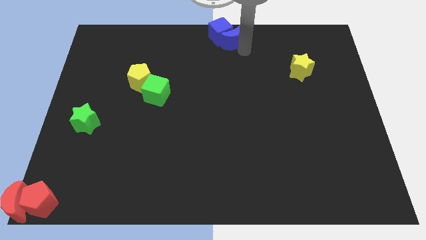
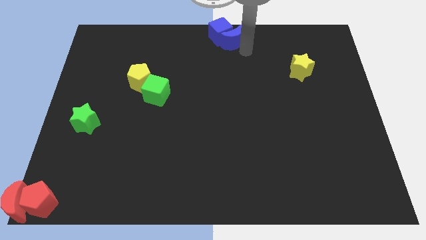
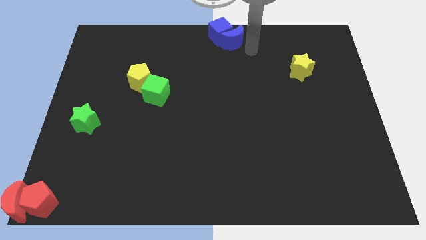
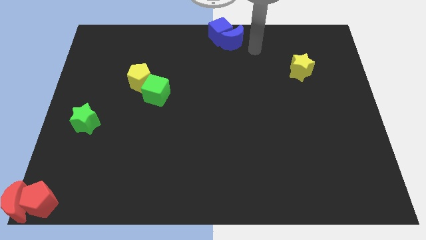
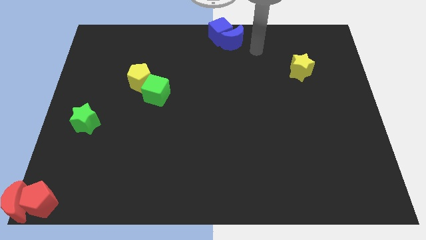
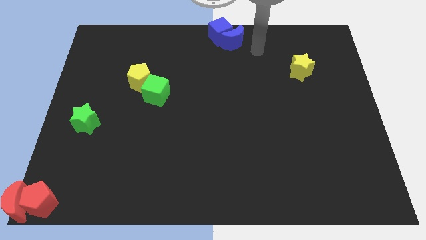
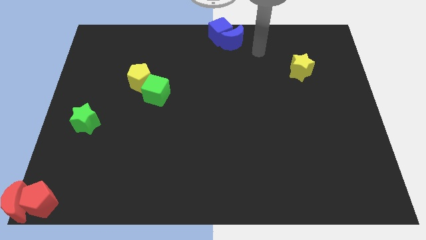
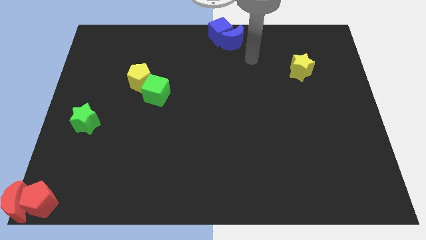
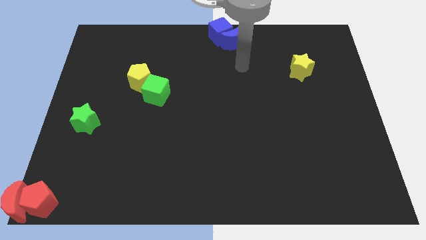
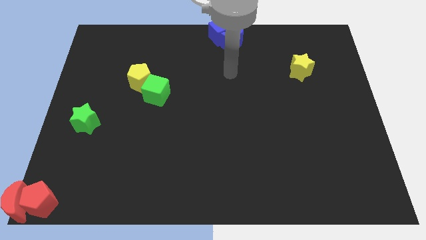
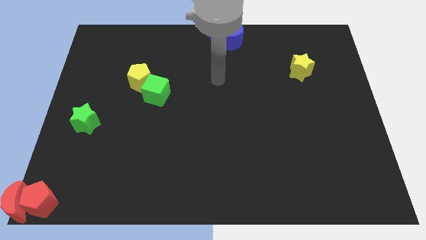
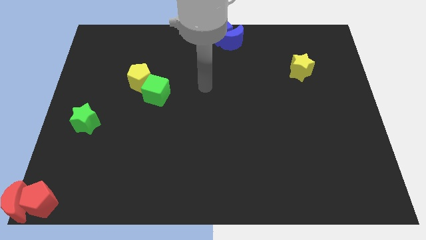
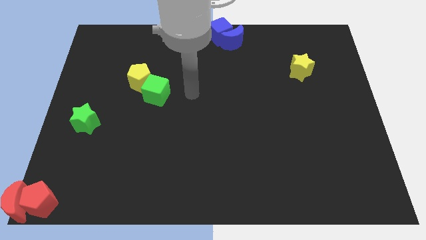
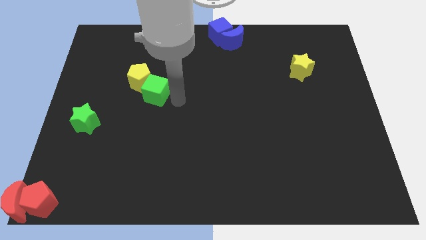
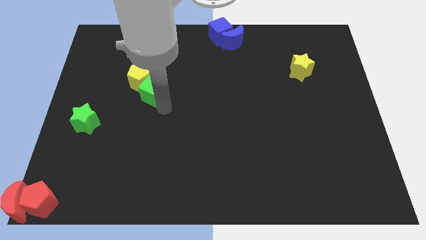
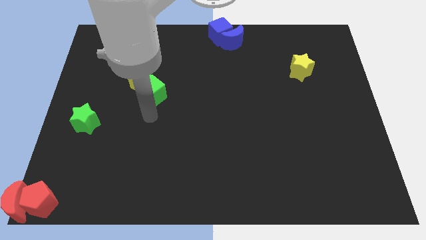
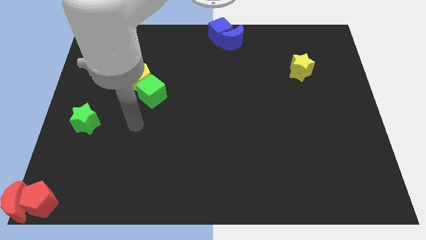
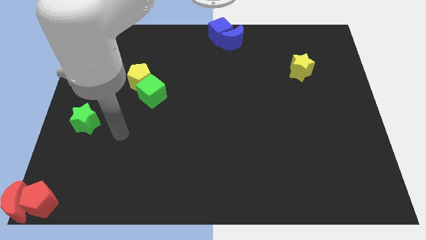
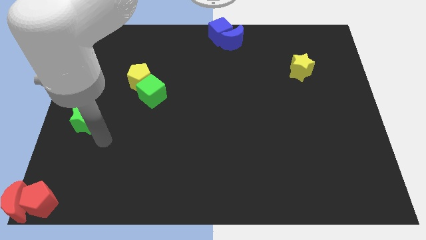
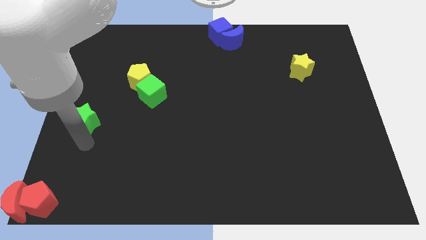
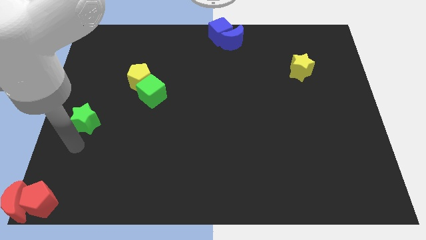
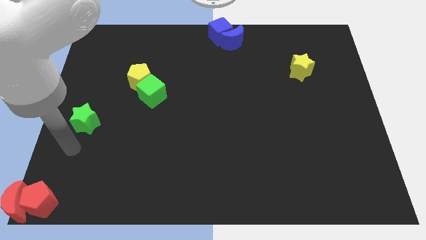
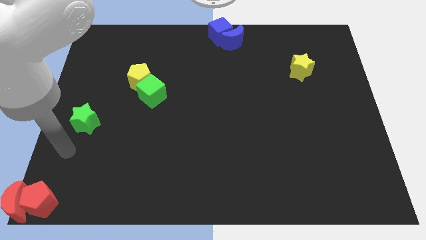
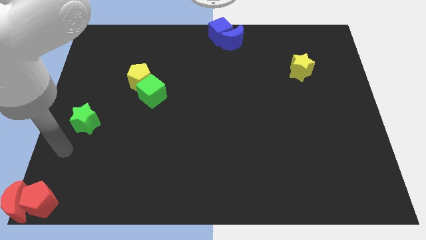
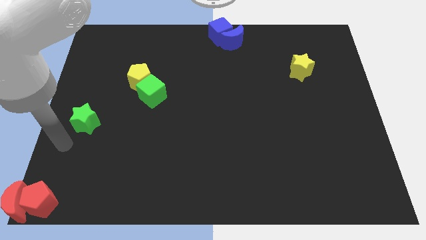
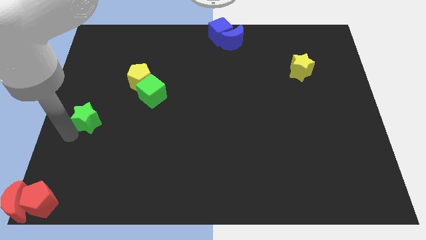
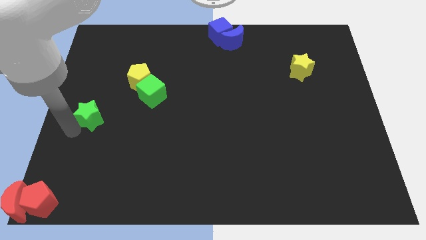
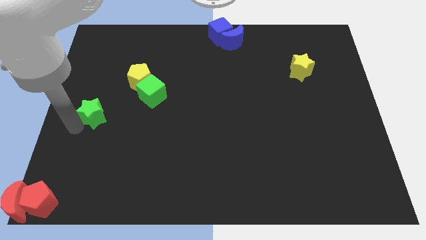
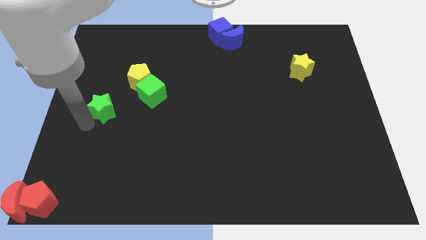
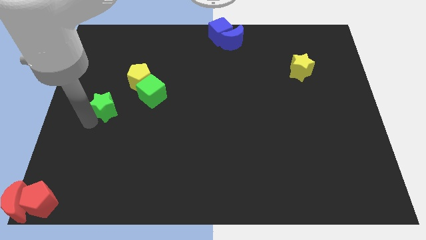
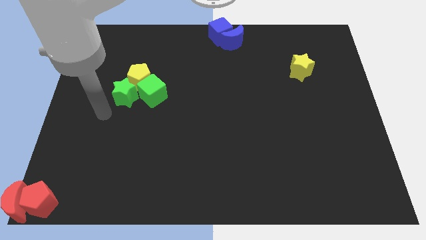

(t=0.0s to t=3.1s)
push the green star into yellow pentagon

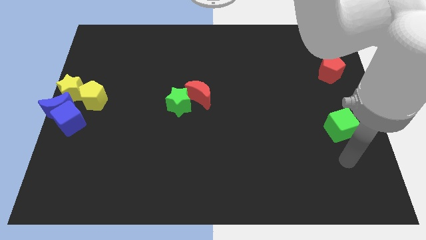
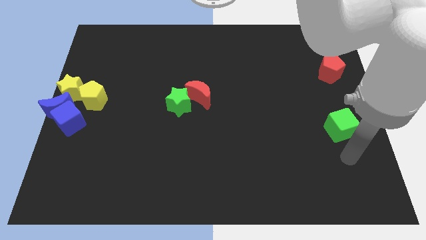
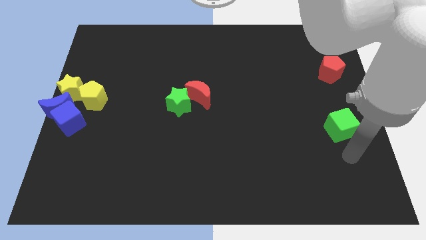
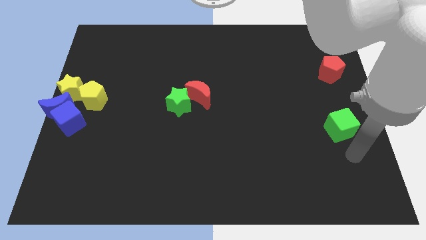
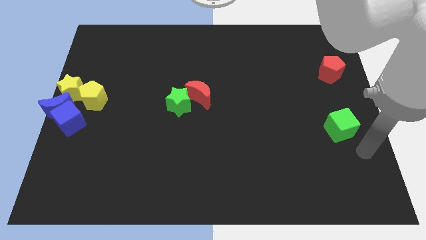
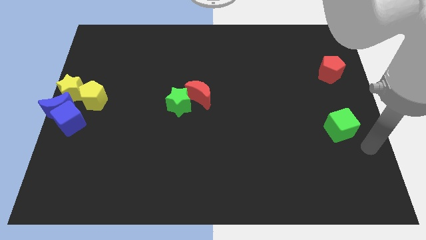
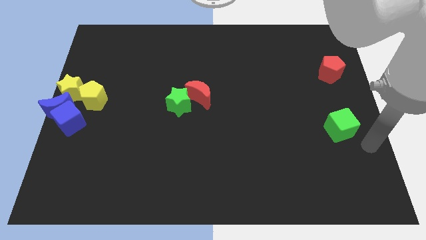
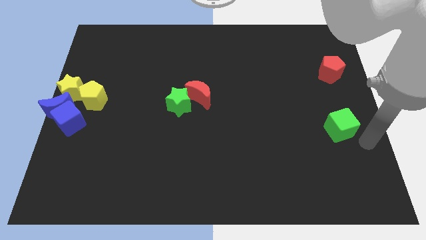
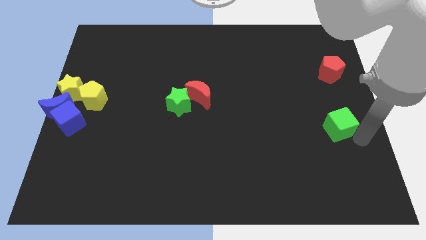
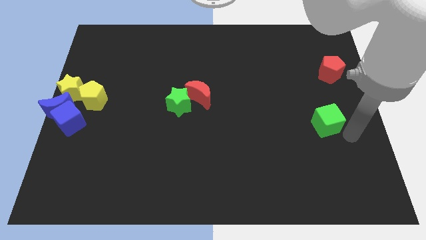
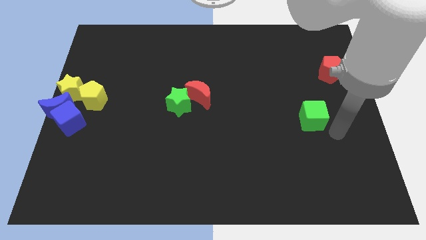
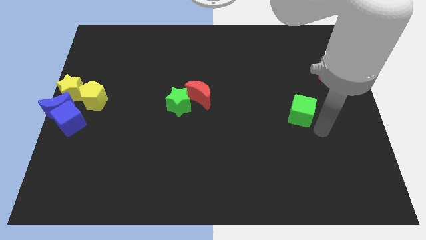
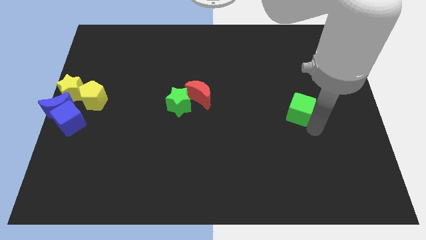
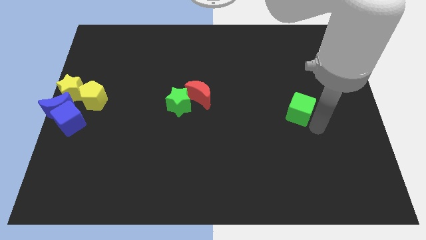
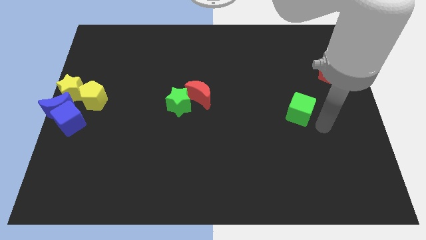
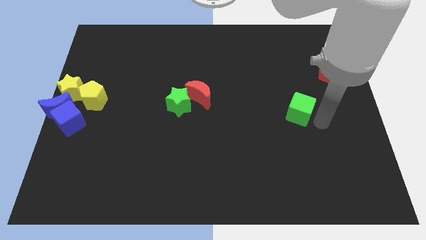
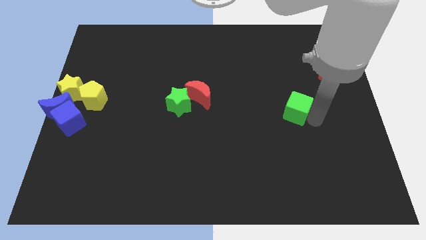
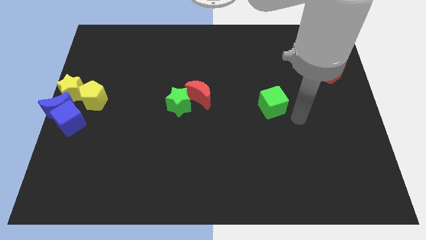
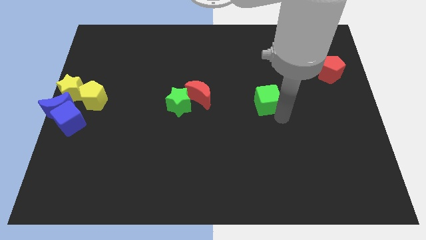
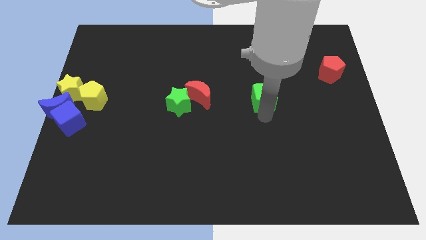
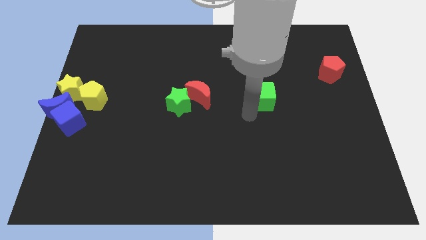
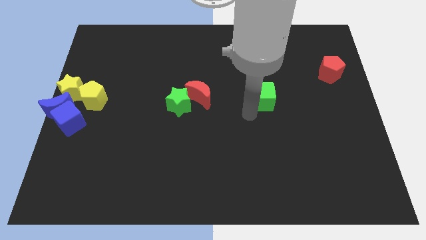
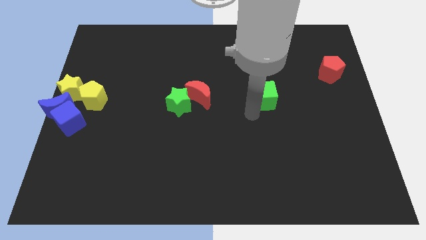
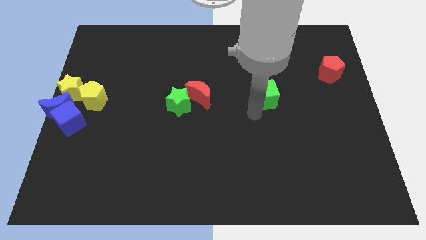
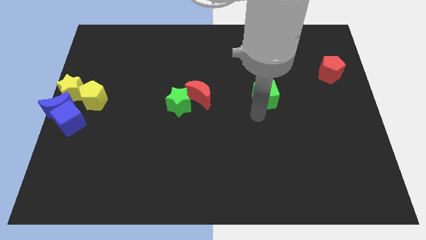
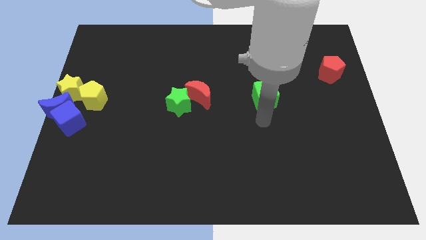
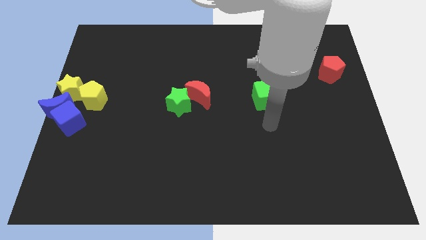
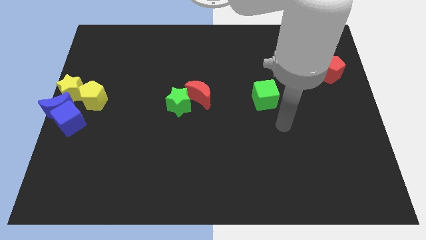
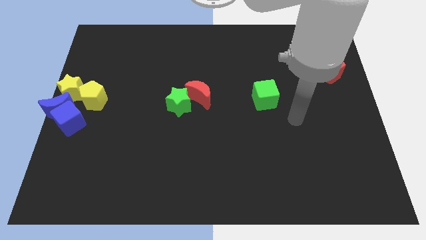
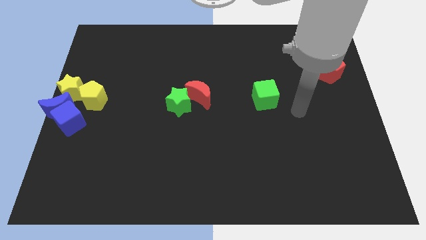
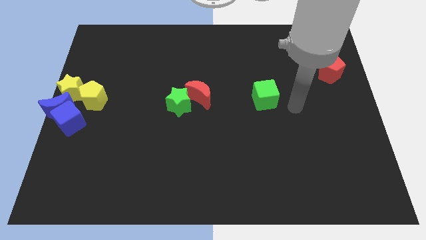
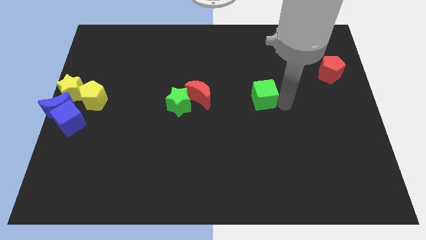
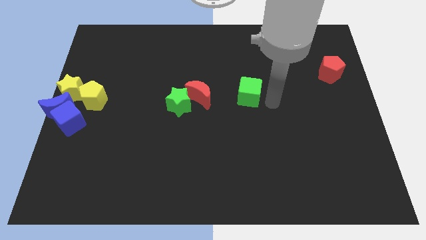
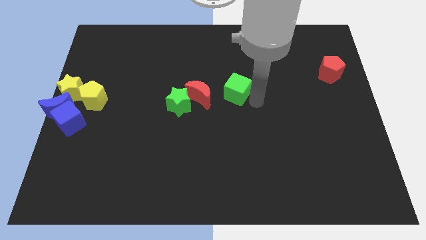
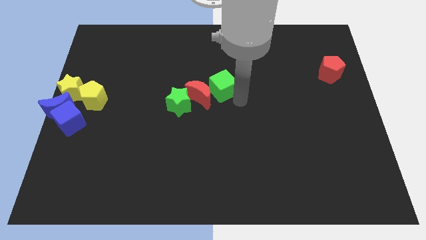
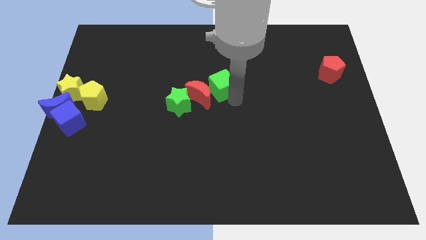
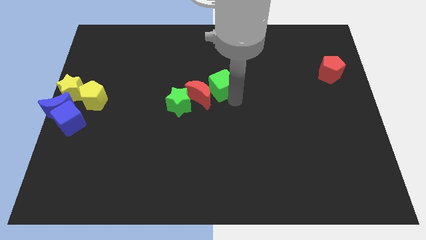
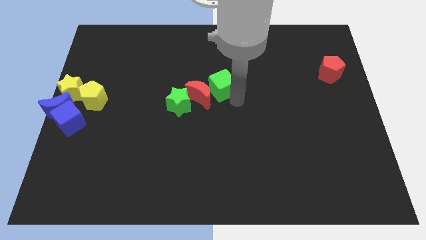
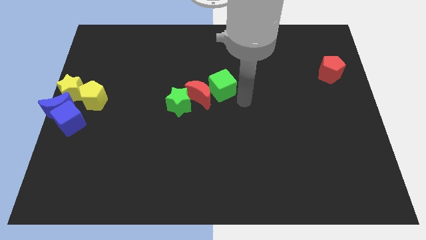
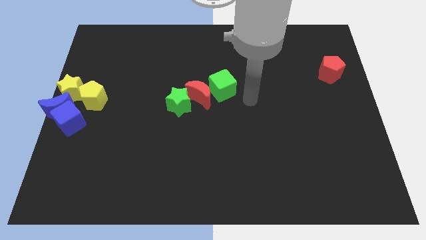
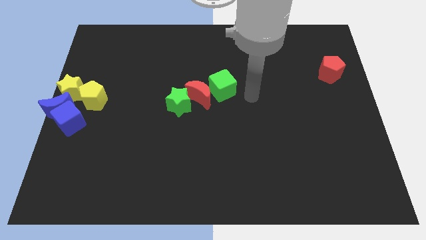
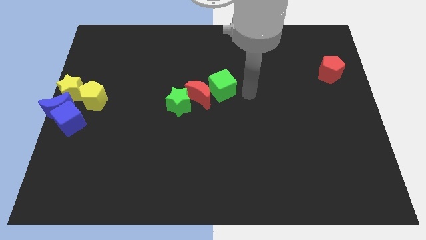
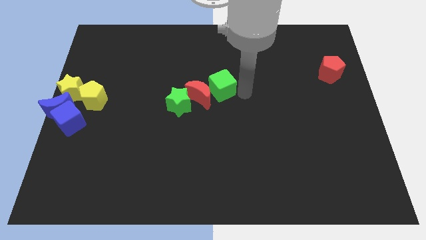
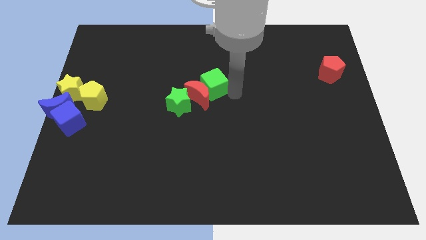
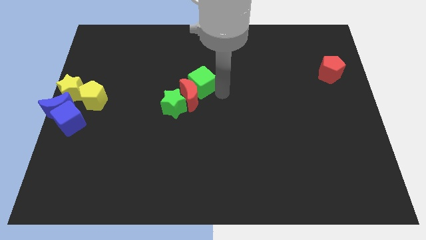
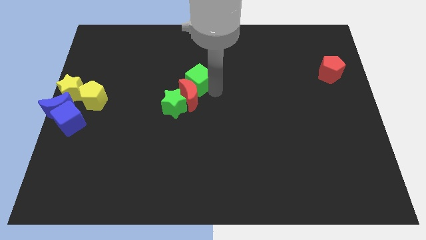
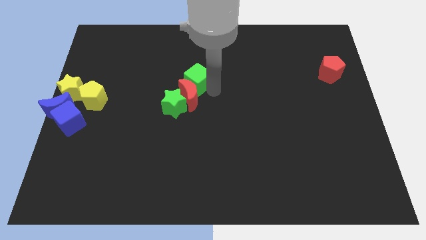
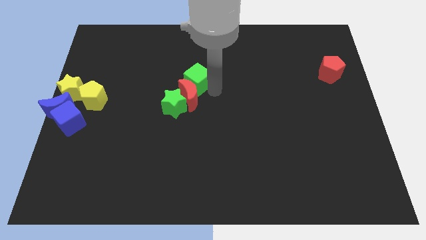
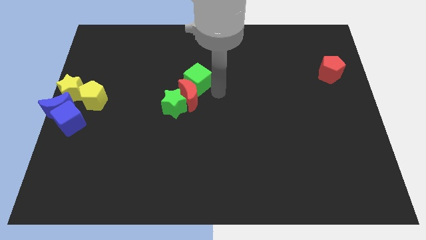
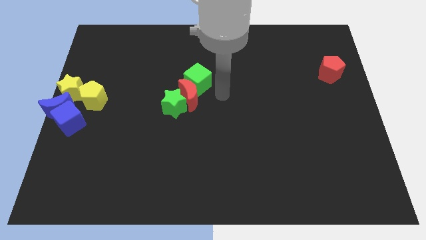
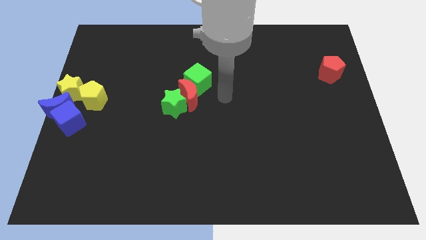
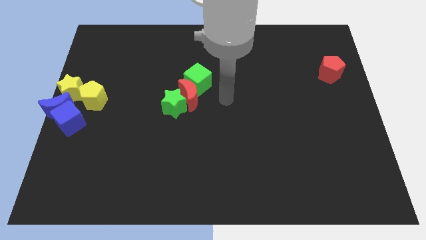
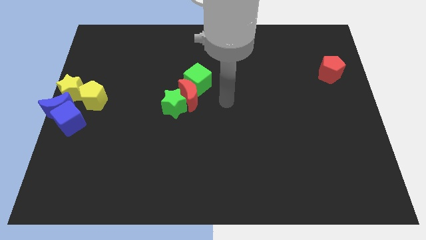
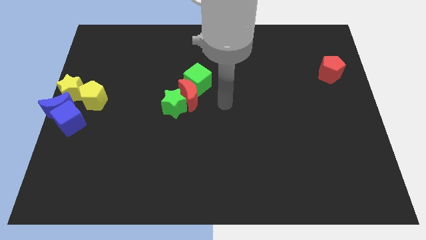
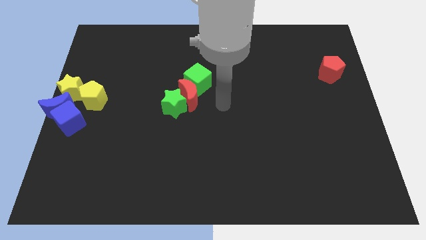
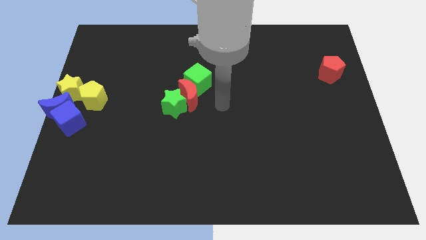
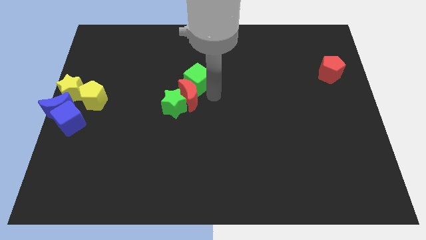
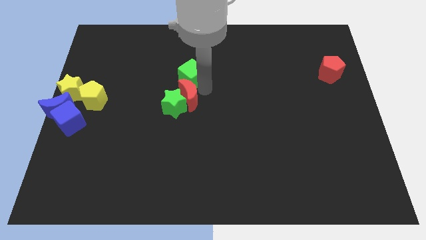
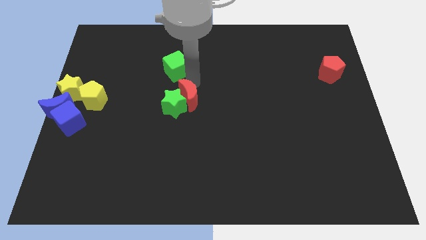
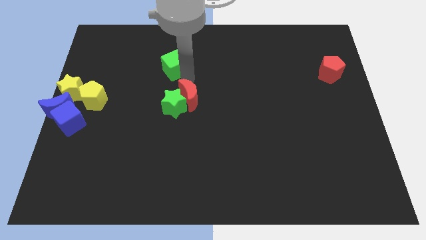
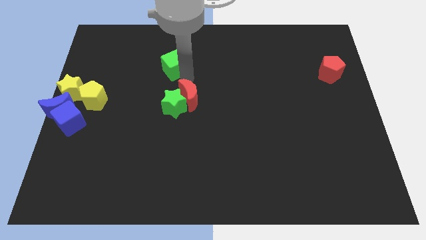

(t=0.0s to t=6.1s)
move green cube above green star
